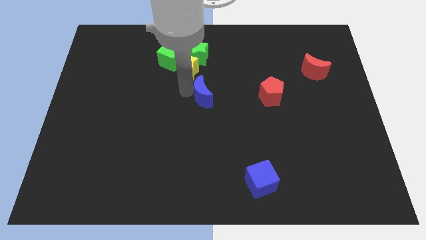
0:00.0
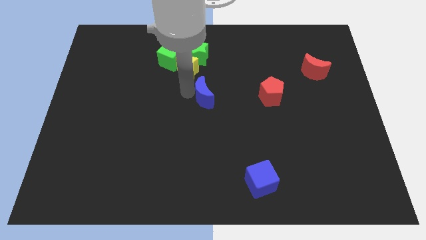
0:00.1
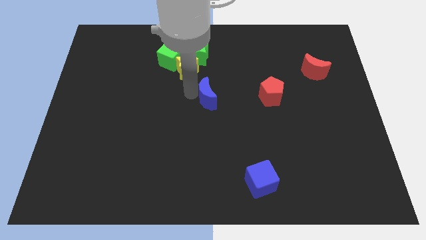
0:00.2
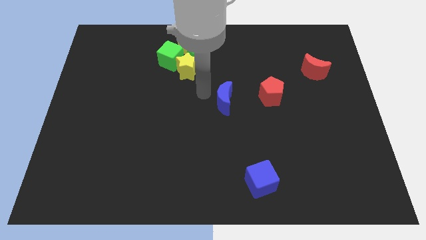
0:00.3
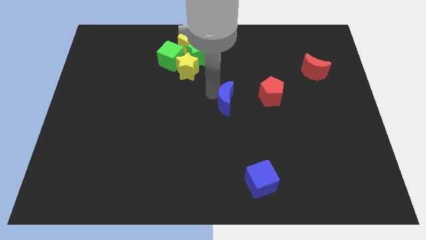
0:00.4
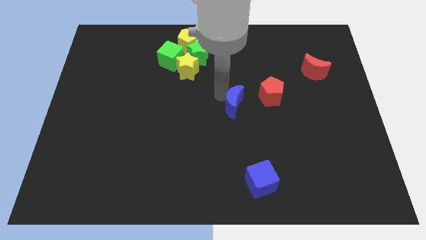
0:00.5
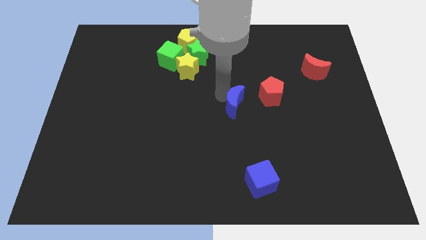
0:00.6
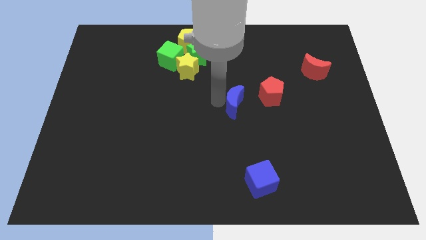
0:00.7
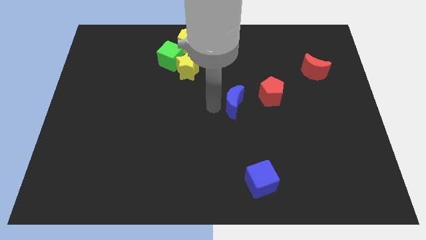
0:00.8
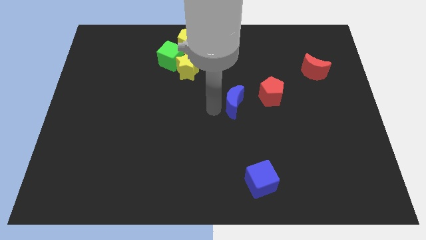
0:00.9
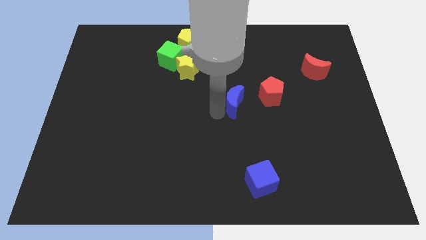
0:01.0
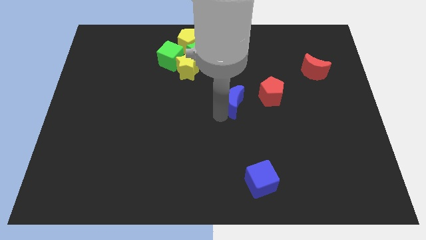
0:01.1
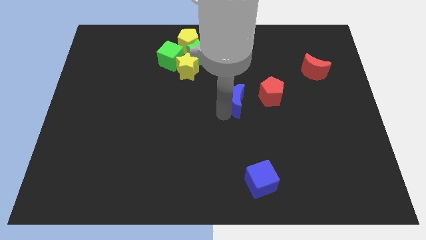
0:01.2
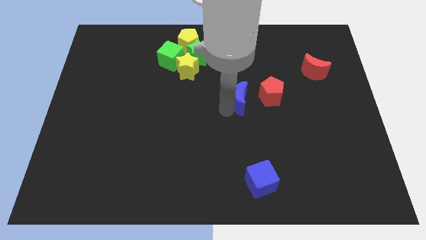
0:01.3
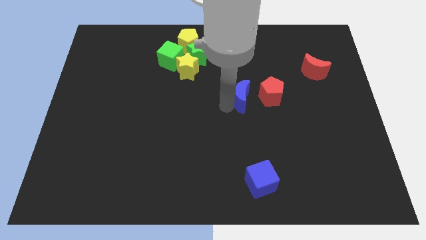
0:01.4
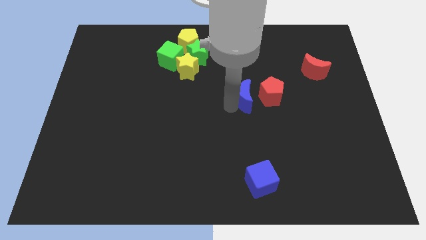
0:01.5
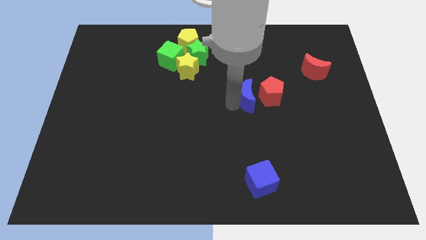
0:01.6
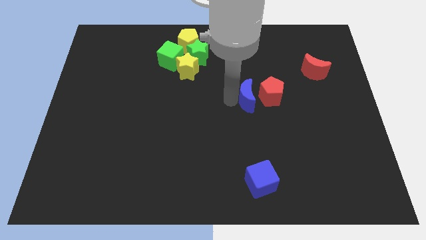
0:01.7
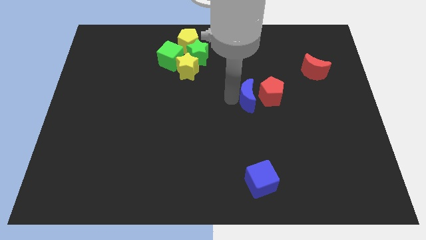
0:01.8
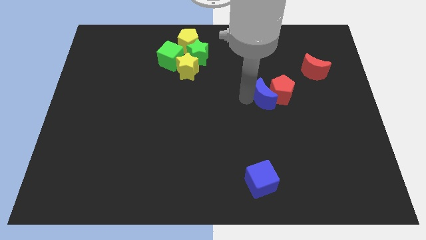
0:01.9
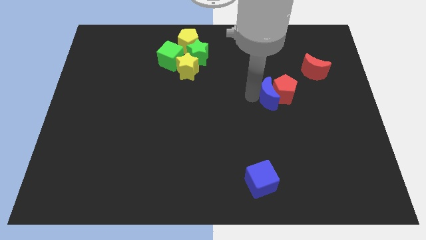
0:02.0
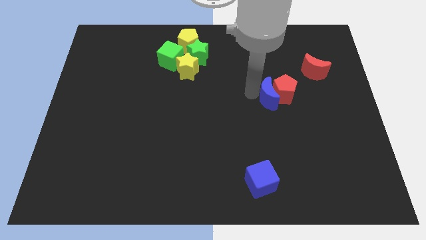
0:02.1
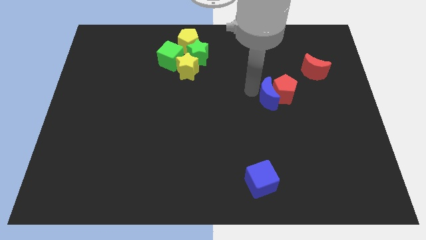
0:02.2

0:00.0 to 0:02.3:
push blue moon close to red pentagon

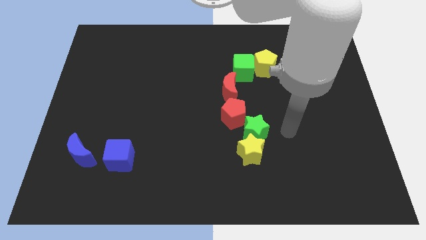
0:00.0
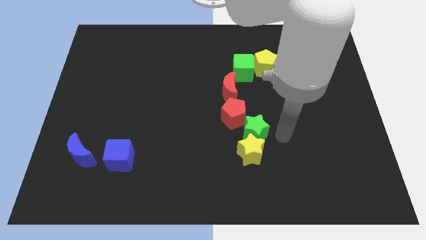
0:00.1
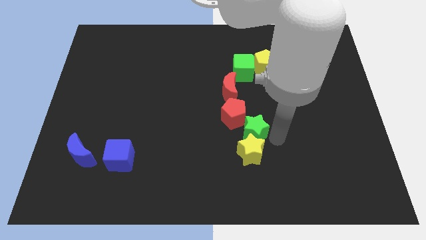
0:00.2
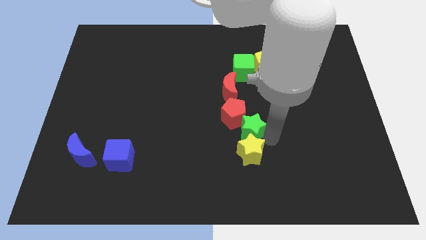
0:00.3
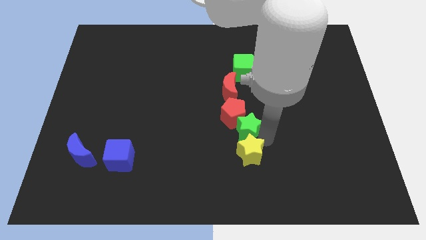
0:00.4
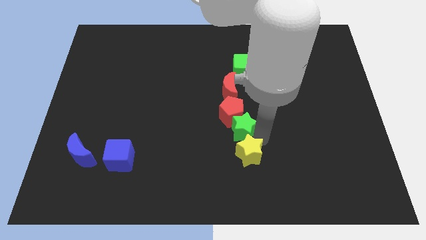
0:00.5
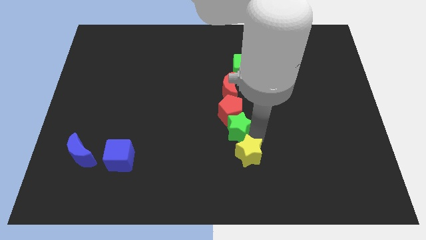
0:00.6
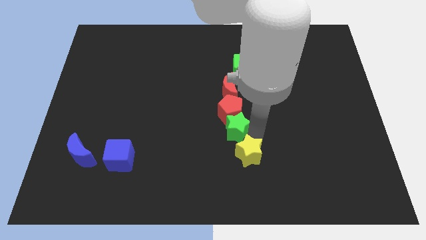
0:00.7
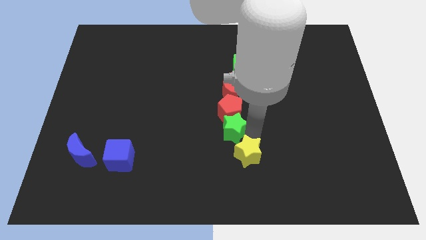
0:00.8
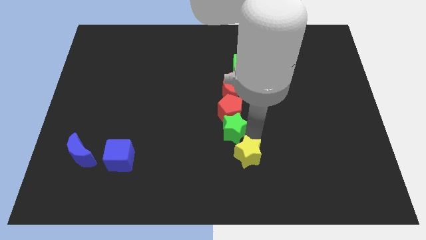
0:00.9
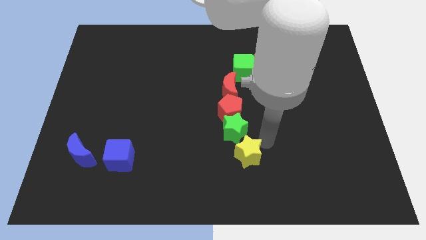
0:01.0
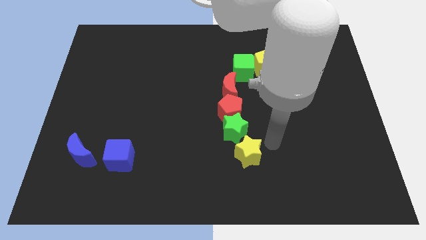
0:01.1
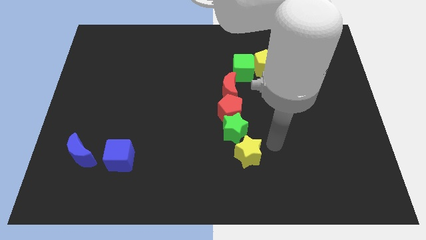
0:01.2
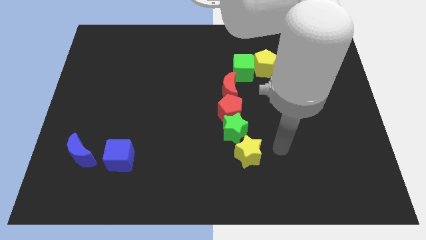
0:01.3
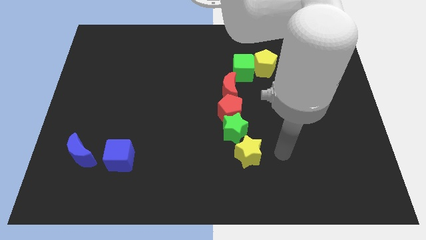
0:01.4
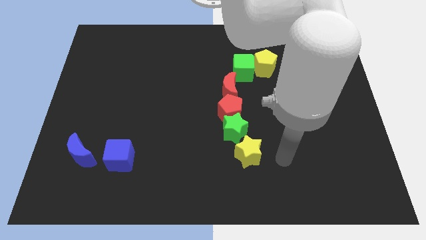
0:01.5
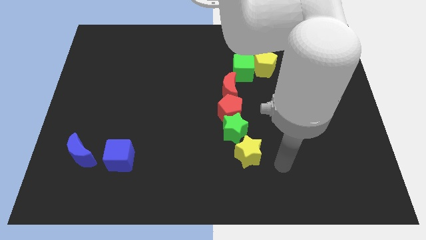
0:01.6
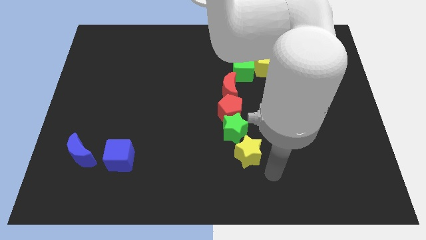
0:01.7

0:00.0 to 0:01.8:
push the green star into red pentagon

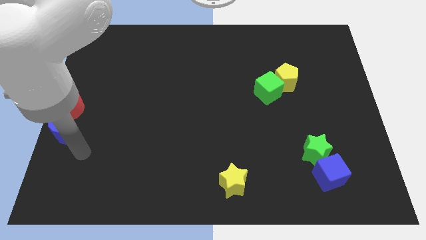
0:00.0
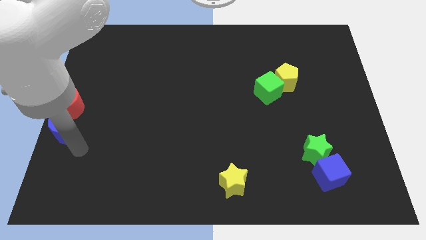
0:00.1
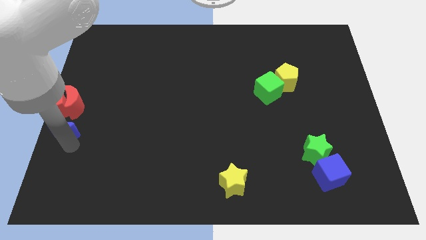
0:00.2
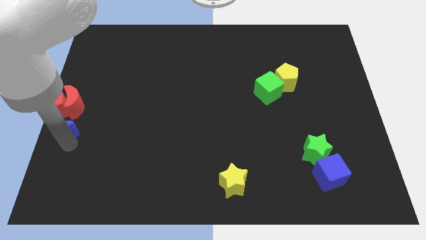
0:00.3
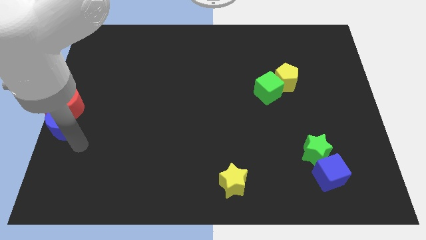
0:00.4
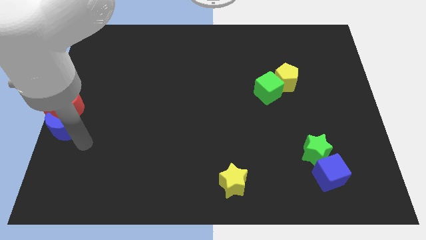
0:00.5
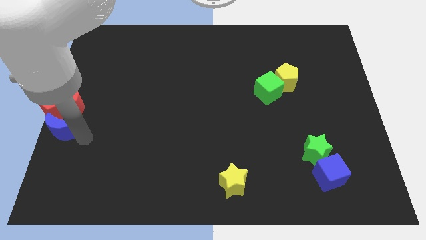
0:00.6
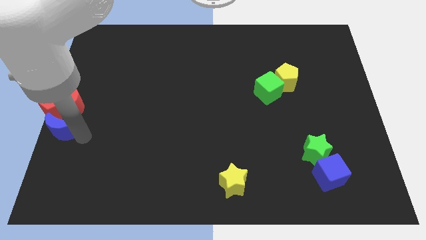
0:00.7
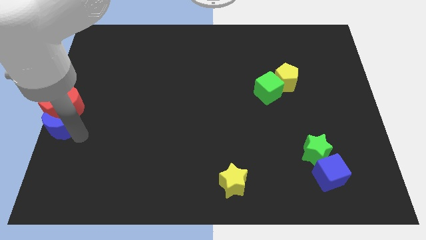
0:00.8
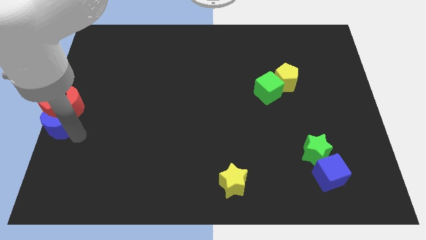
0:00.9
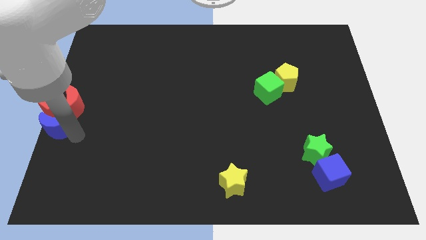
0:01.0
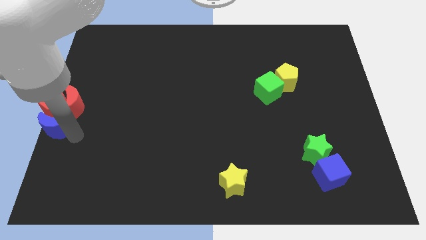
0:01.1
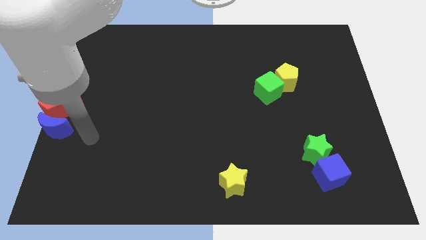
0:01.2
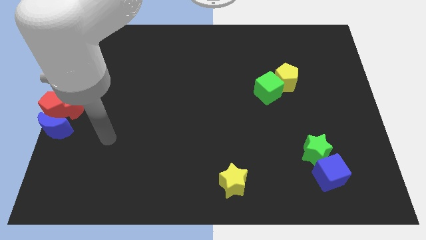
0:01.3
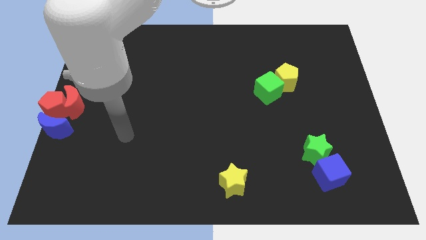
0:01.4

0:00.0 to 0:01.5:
place the blue crescent into red pentagon

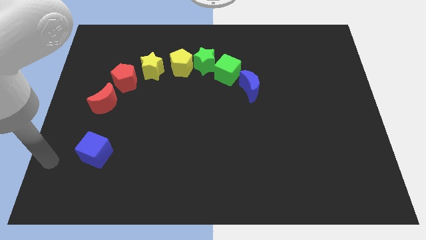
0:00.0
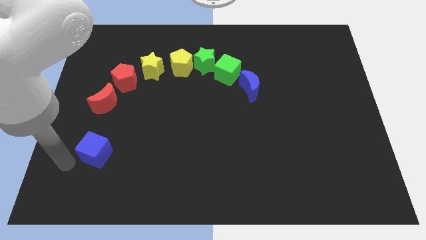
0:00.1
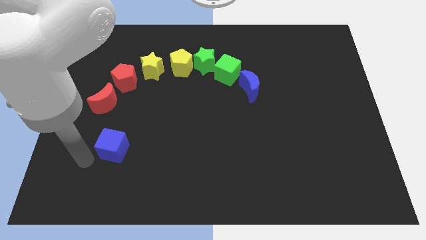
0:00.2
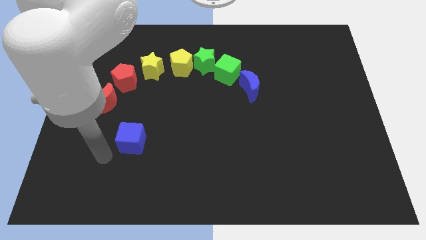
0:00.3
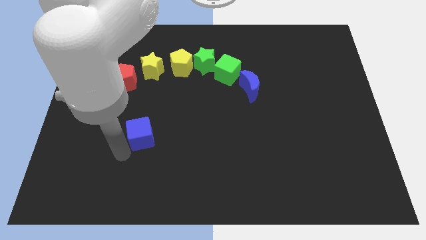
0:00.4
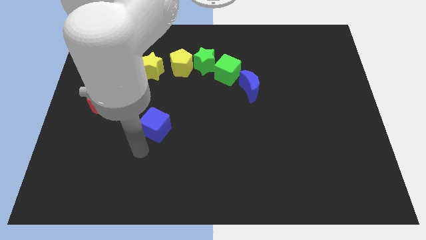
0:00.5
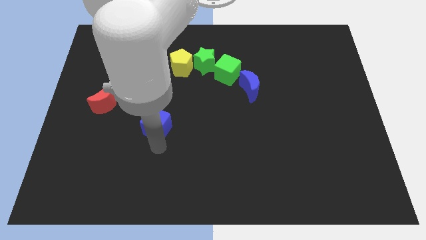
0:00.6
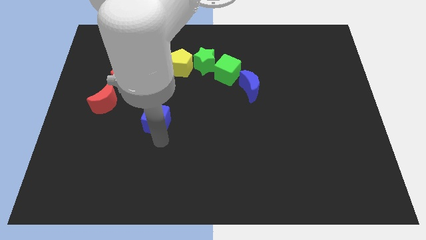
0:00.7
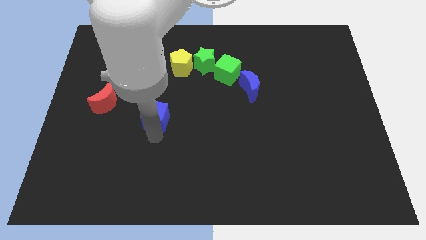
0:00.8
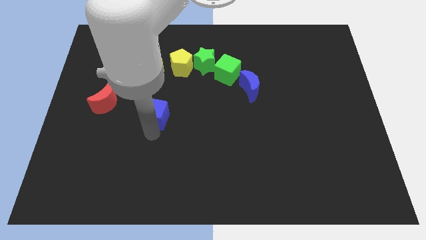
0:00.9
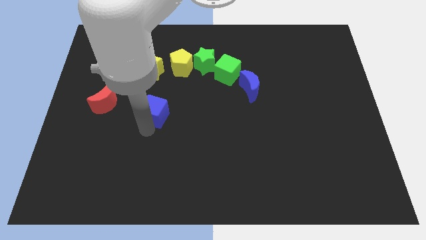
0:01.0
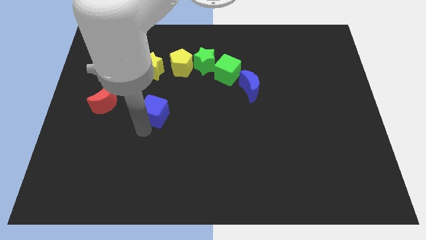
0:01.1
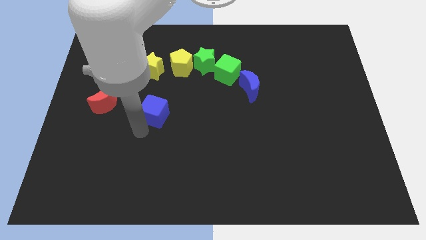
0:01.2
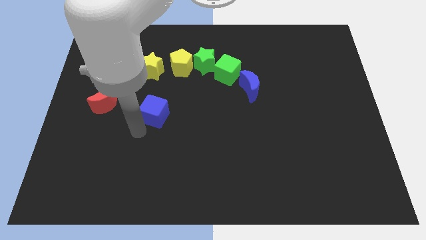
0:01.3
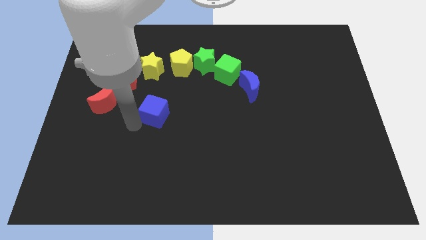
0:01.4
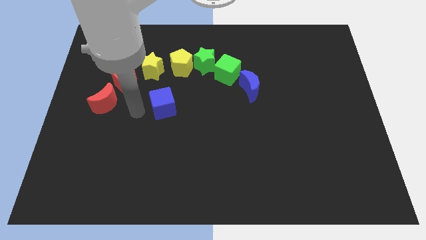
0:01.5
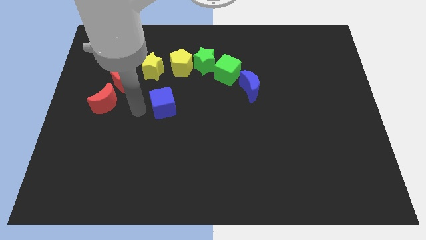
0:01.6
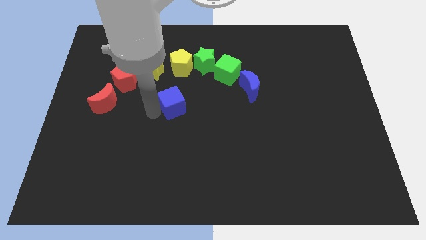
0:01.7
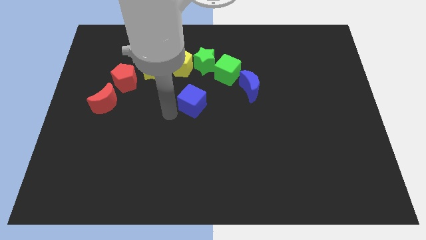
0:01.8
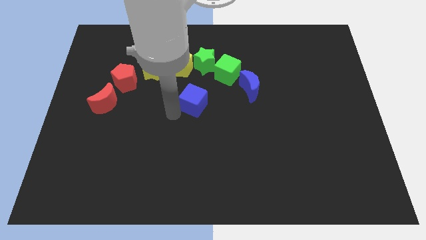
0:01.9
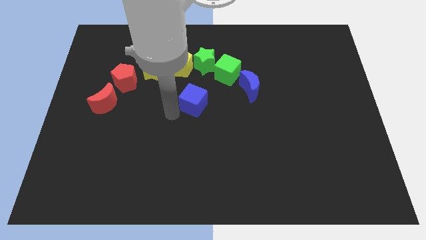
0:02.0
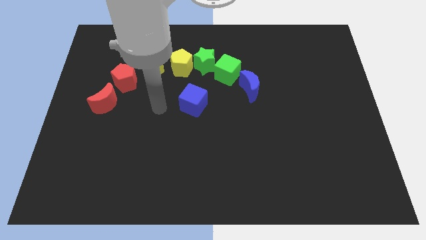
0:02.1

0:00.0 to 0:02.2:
move the blue cube to the center of the board

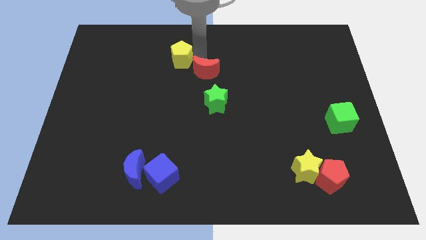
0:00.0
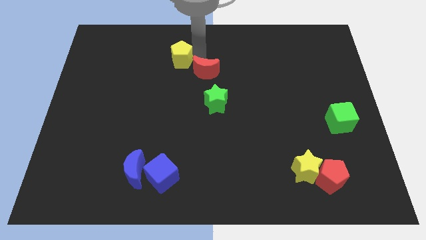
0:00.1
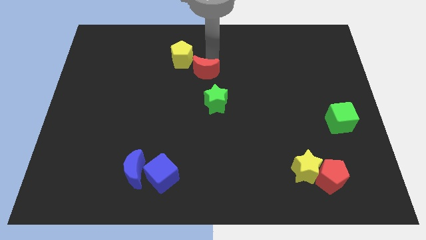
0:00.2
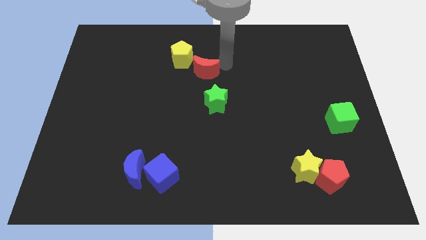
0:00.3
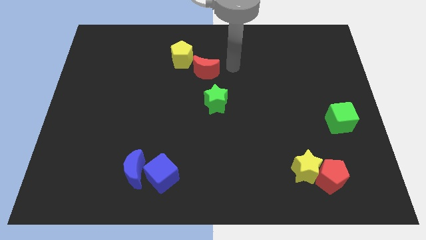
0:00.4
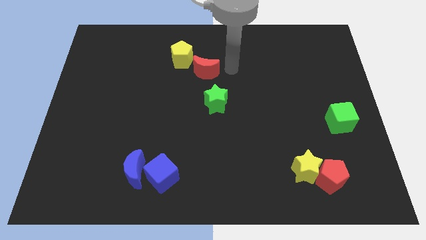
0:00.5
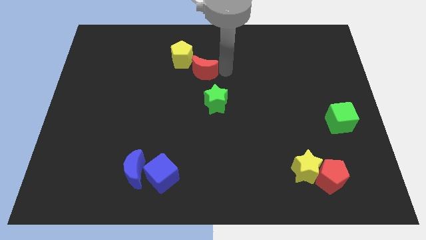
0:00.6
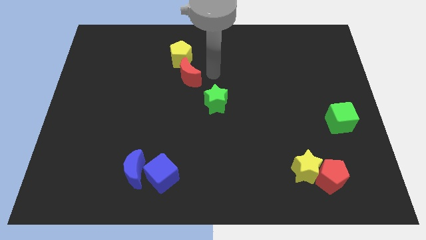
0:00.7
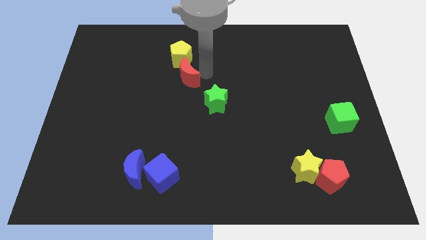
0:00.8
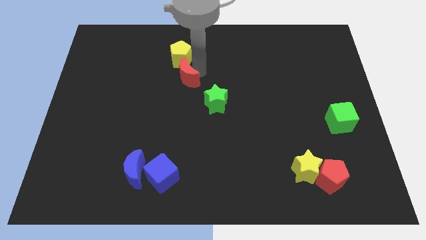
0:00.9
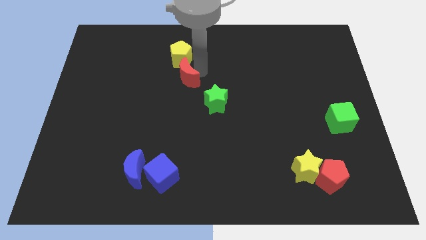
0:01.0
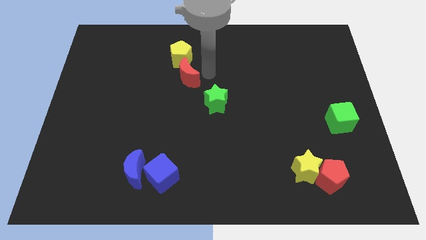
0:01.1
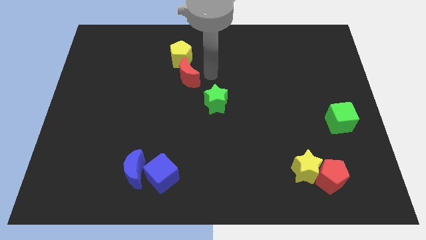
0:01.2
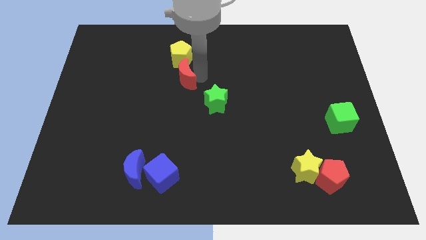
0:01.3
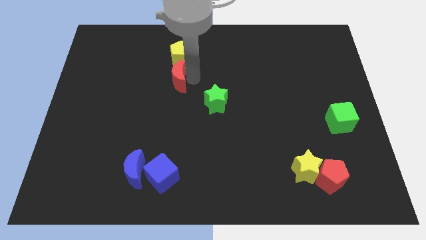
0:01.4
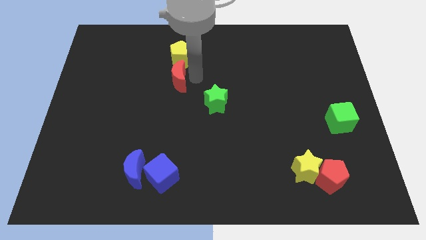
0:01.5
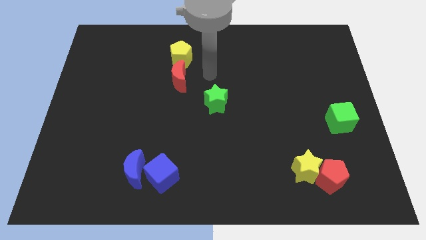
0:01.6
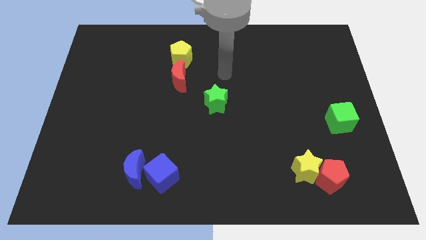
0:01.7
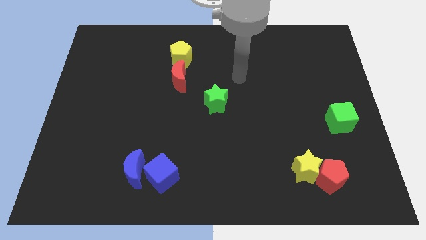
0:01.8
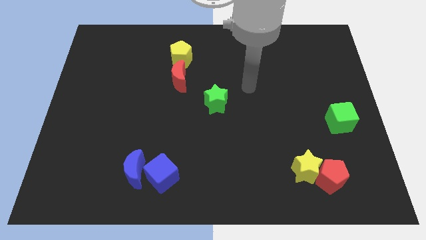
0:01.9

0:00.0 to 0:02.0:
place the red moon below yellow pentagon
